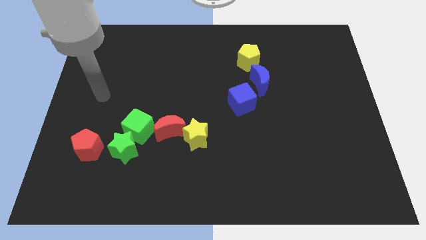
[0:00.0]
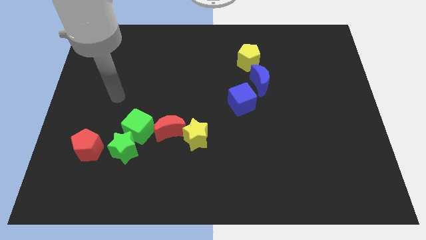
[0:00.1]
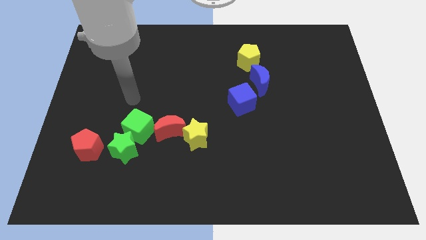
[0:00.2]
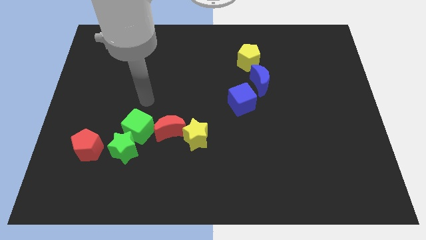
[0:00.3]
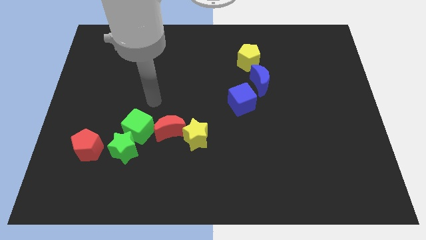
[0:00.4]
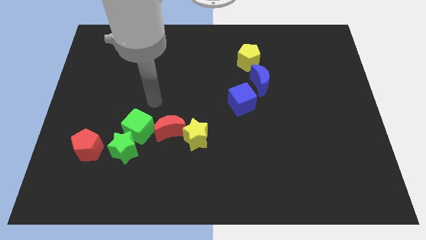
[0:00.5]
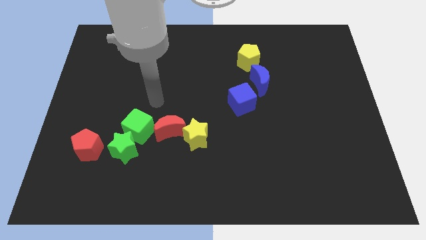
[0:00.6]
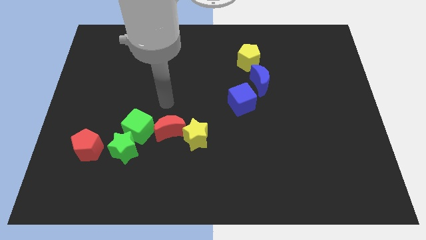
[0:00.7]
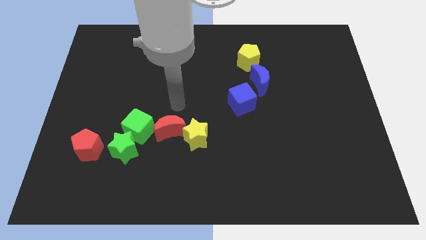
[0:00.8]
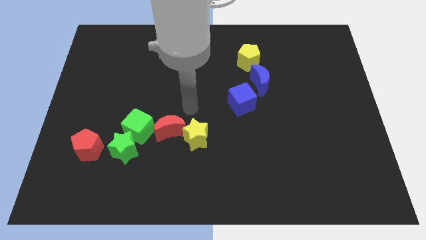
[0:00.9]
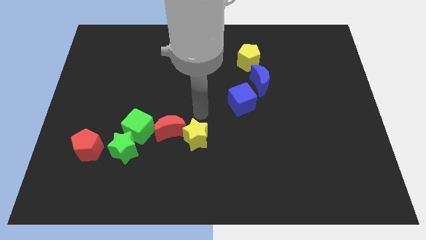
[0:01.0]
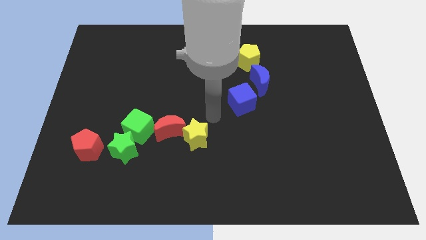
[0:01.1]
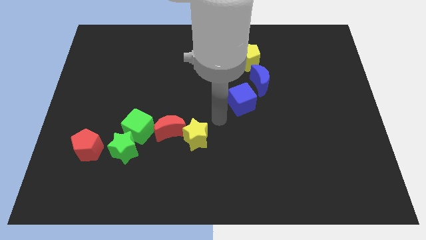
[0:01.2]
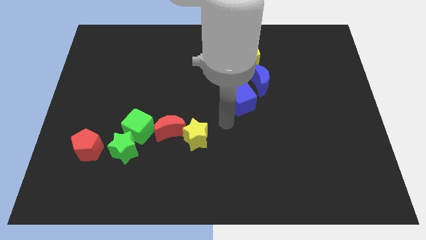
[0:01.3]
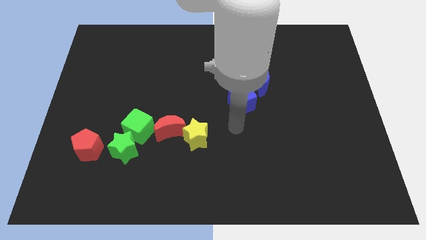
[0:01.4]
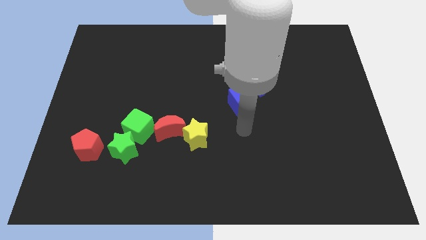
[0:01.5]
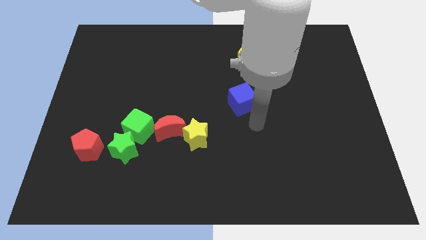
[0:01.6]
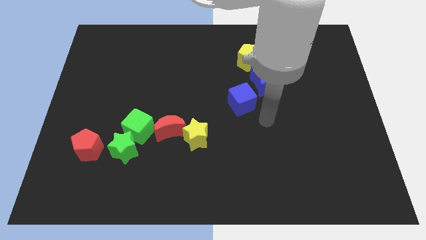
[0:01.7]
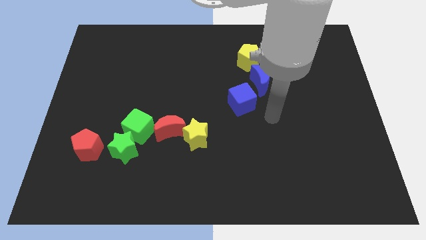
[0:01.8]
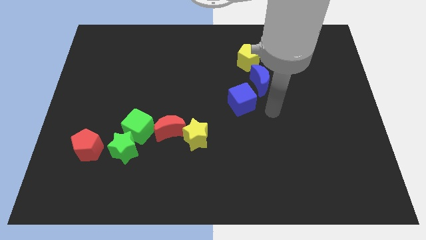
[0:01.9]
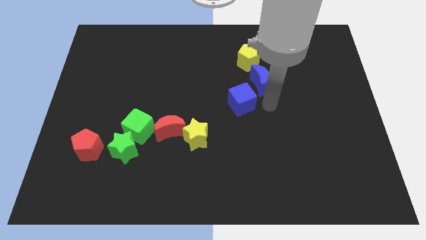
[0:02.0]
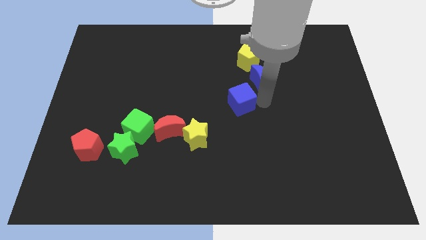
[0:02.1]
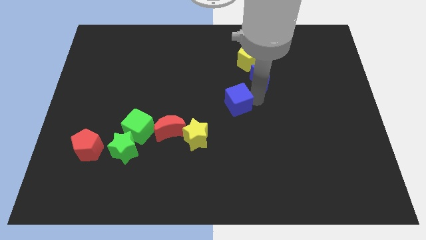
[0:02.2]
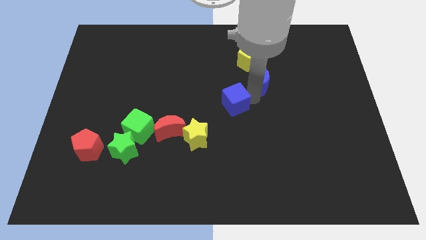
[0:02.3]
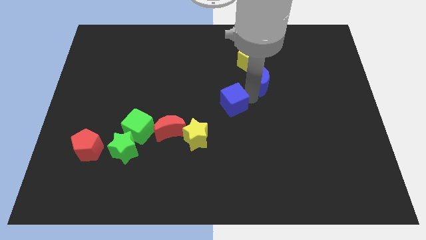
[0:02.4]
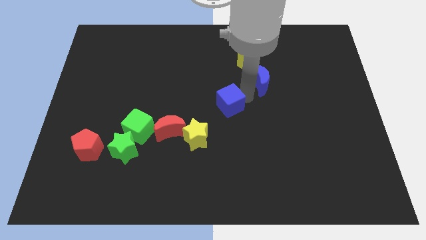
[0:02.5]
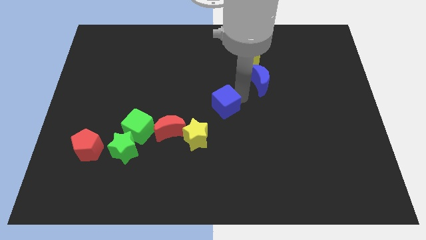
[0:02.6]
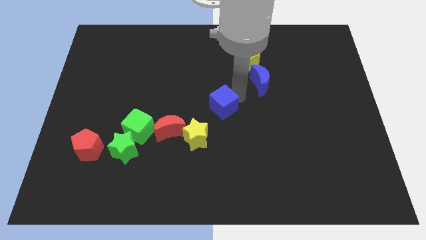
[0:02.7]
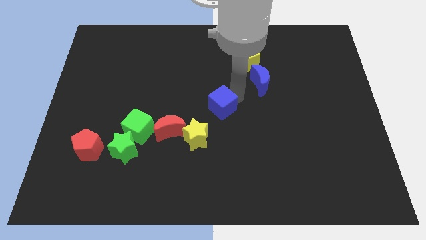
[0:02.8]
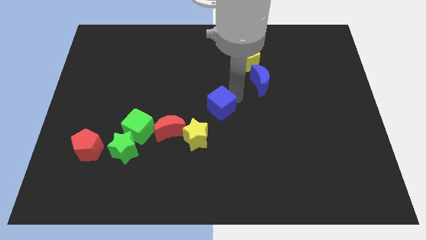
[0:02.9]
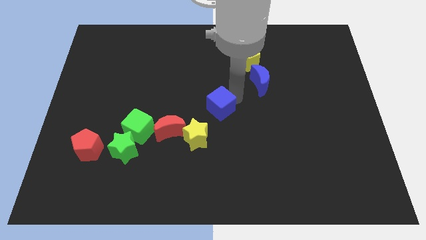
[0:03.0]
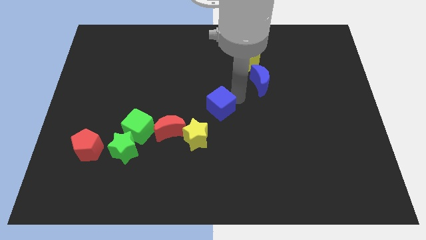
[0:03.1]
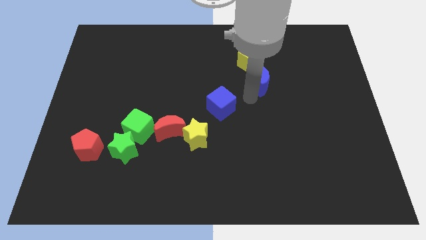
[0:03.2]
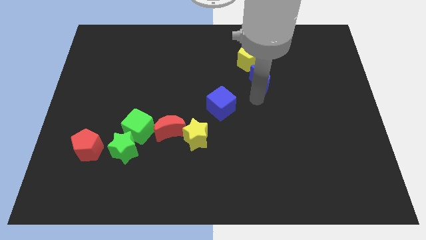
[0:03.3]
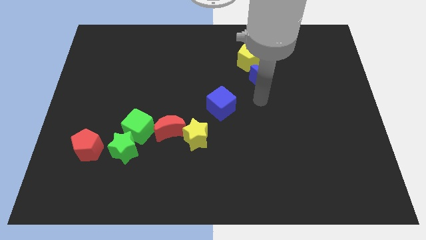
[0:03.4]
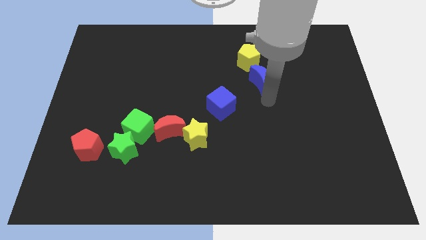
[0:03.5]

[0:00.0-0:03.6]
place the blue block right ahead to yellow star

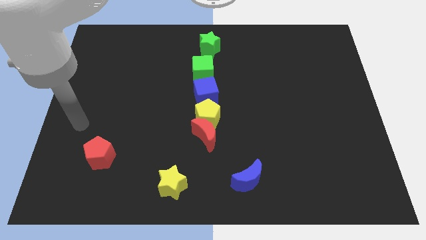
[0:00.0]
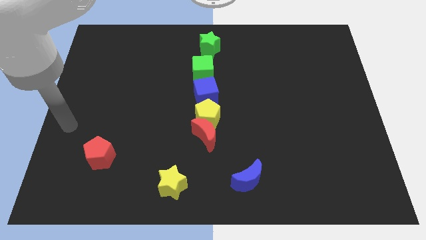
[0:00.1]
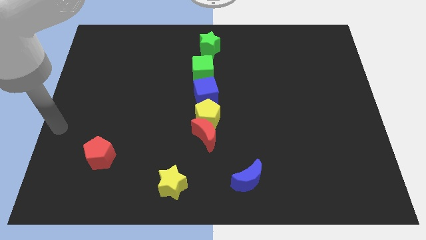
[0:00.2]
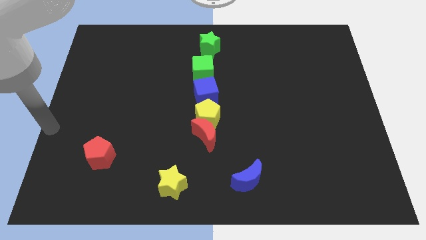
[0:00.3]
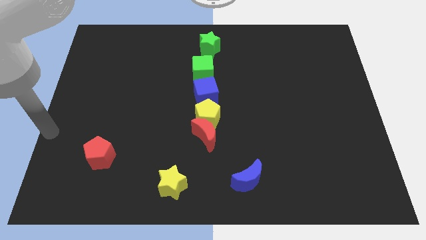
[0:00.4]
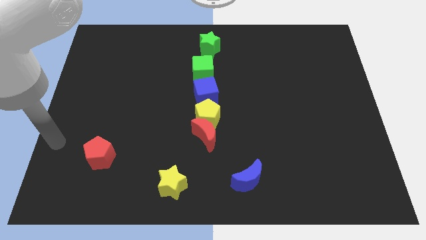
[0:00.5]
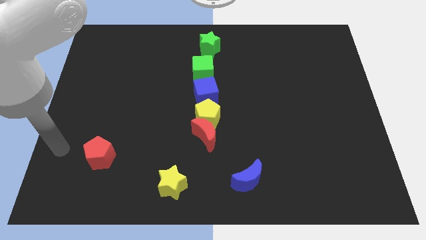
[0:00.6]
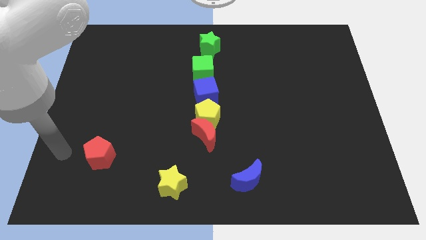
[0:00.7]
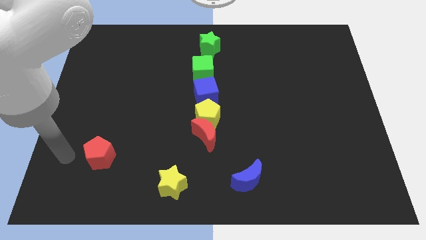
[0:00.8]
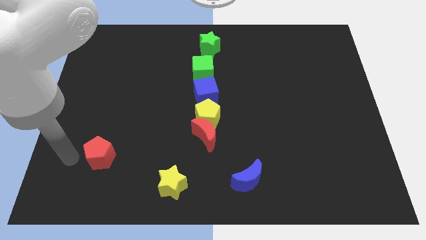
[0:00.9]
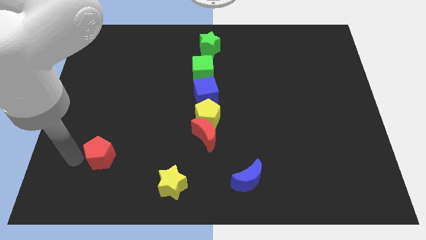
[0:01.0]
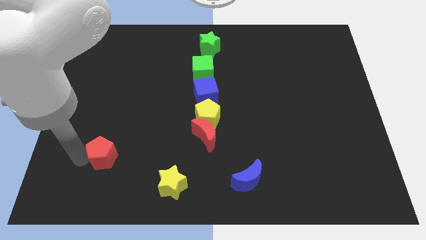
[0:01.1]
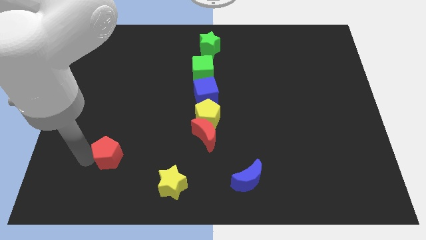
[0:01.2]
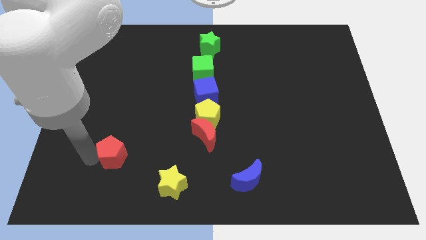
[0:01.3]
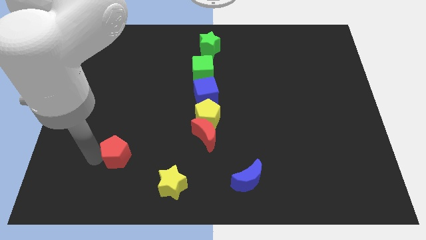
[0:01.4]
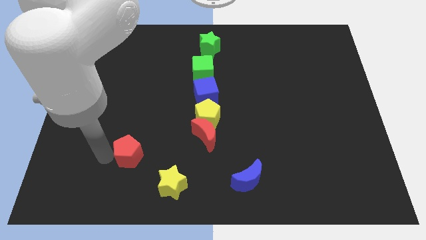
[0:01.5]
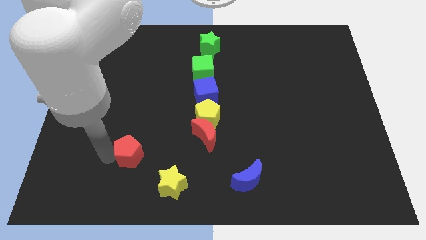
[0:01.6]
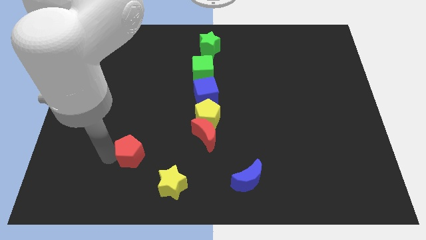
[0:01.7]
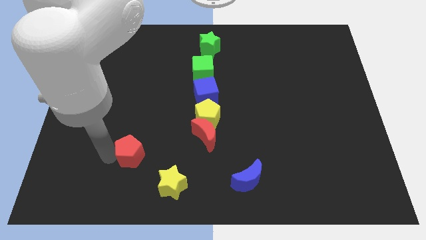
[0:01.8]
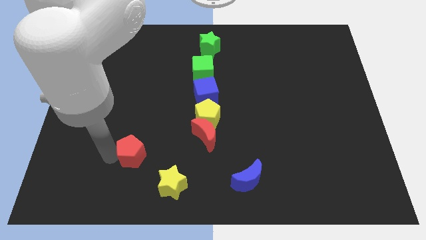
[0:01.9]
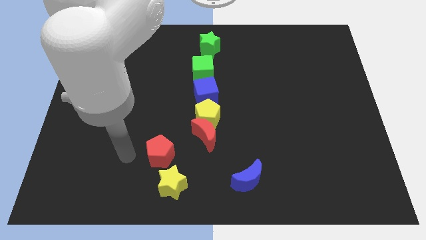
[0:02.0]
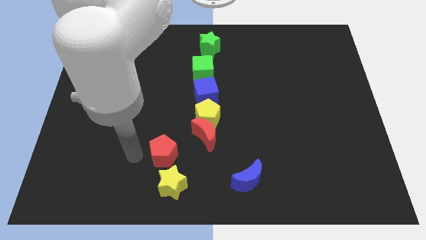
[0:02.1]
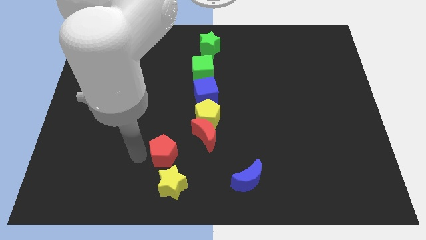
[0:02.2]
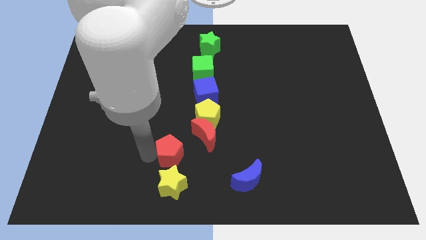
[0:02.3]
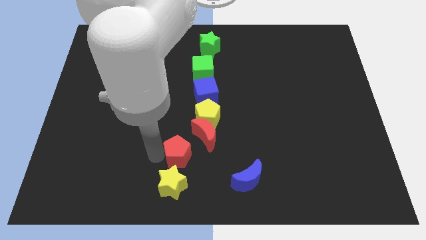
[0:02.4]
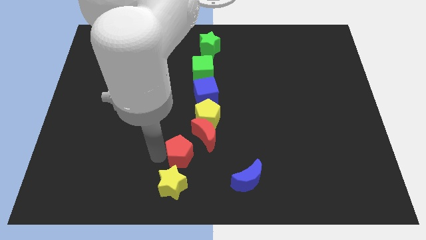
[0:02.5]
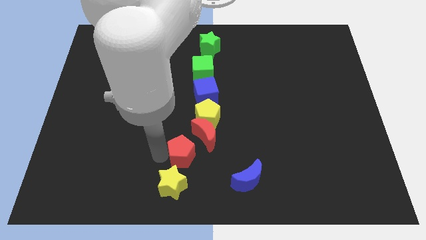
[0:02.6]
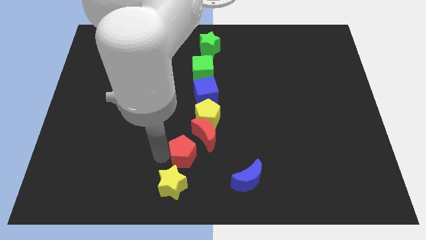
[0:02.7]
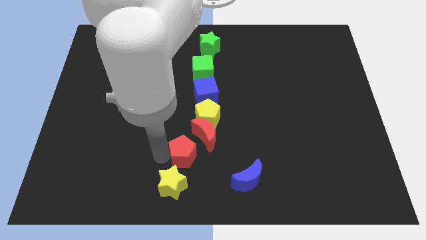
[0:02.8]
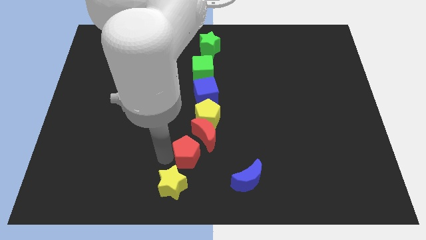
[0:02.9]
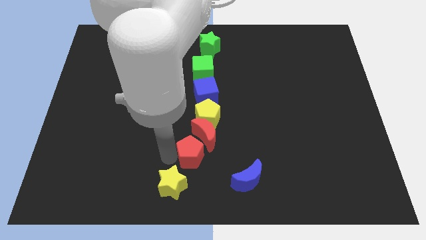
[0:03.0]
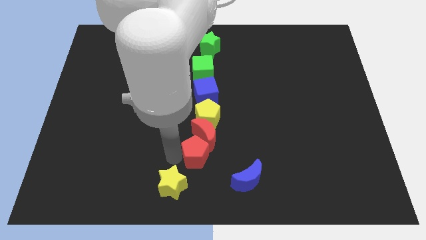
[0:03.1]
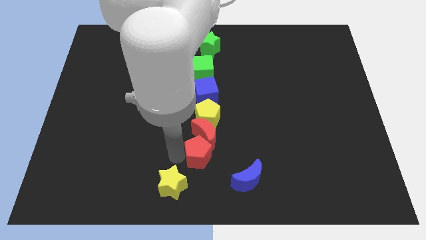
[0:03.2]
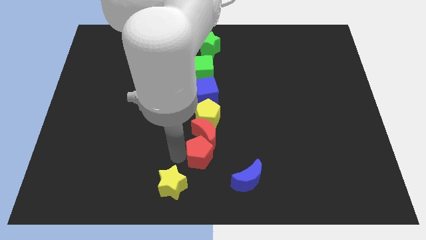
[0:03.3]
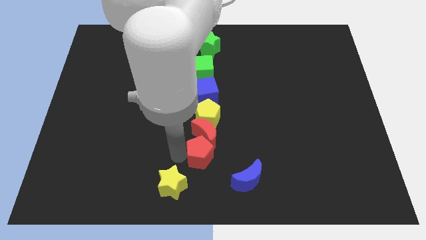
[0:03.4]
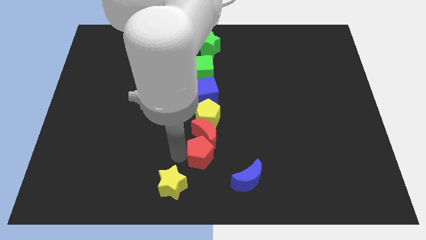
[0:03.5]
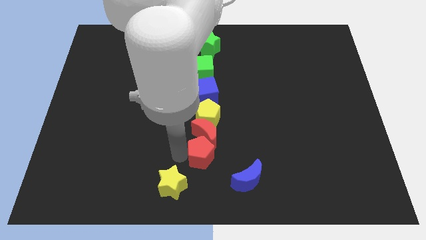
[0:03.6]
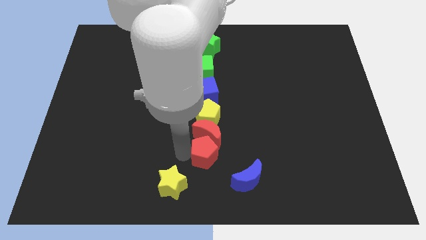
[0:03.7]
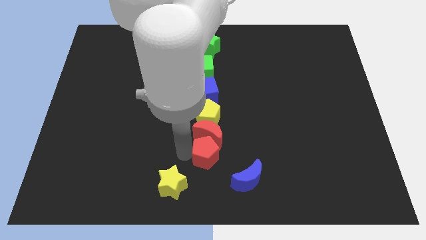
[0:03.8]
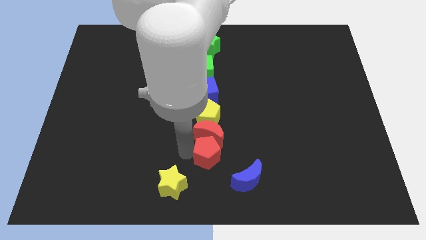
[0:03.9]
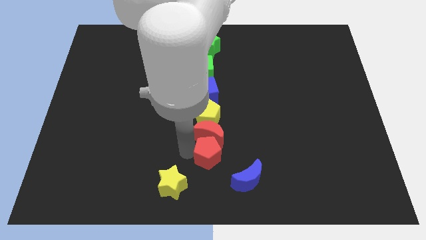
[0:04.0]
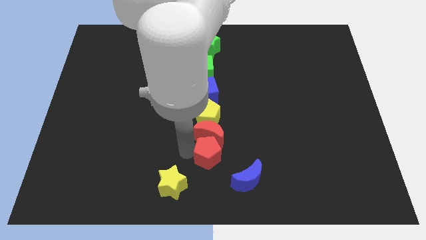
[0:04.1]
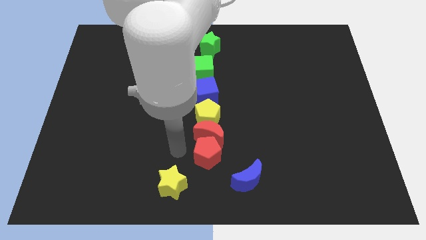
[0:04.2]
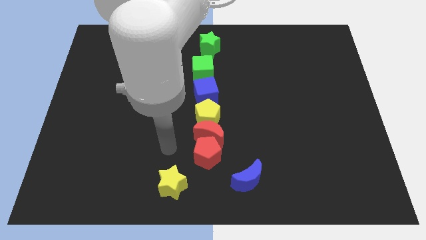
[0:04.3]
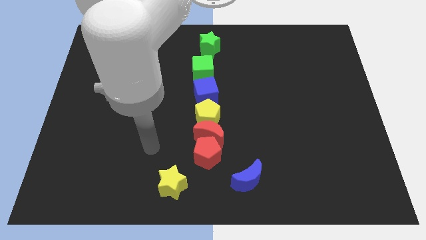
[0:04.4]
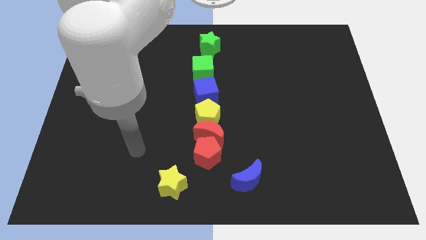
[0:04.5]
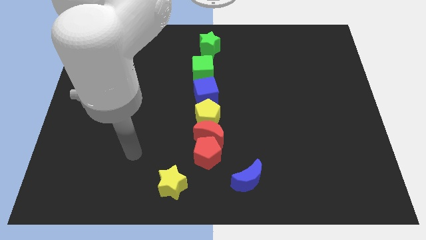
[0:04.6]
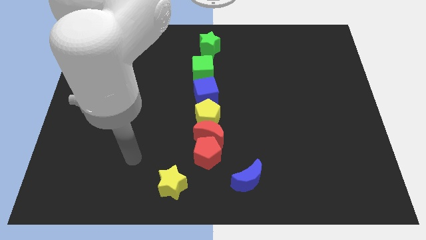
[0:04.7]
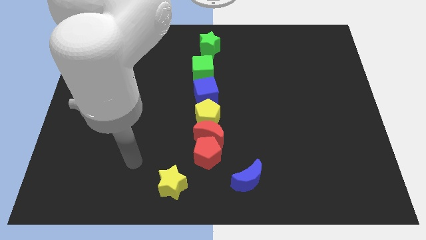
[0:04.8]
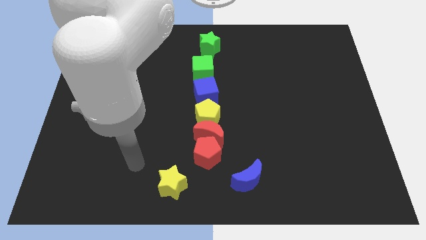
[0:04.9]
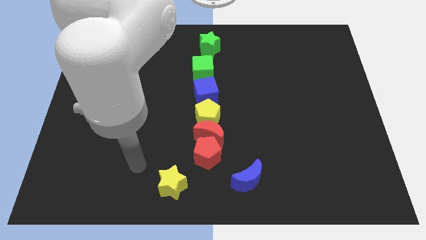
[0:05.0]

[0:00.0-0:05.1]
move the red pentagon below the red moon

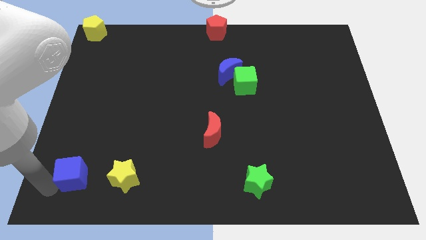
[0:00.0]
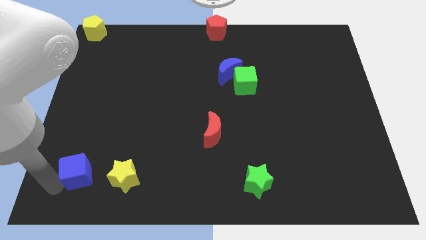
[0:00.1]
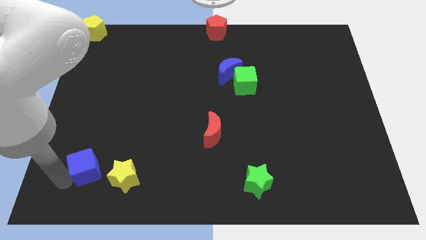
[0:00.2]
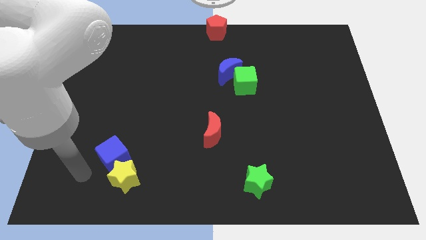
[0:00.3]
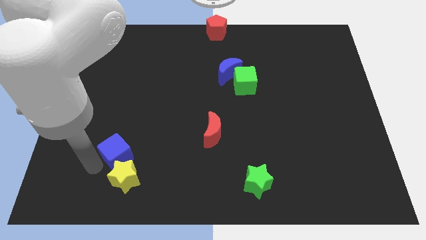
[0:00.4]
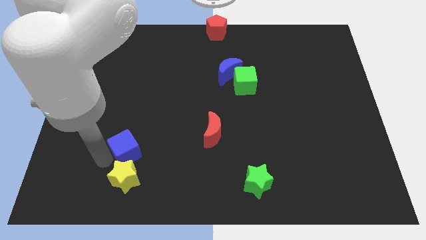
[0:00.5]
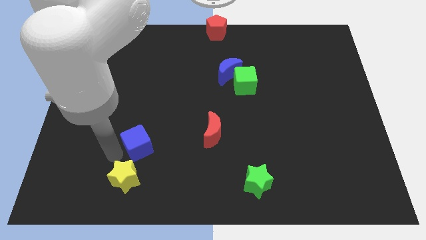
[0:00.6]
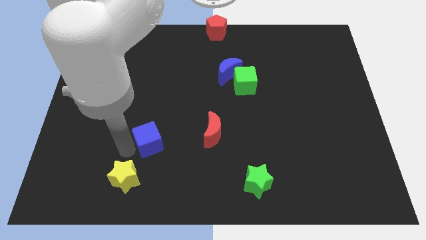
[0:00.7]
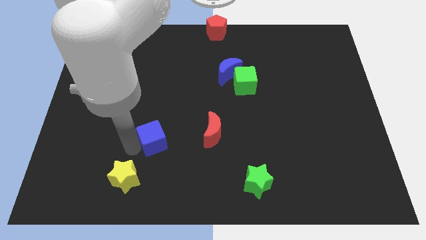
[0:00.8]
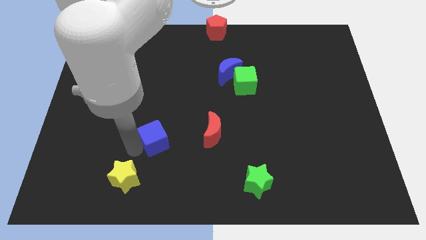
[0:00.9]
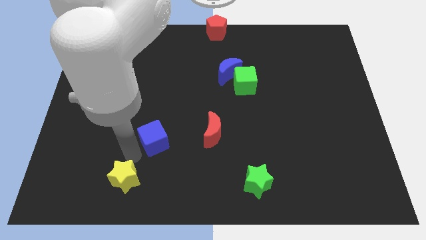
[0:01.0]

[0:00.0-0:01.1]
slide blue cube to the top right of yellow star
